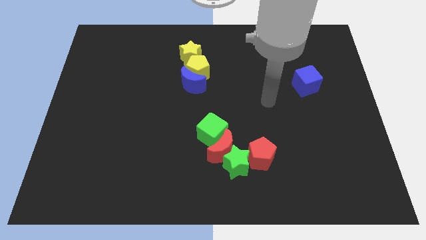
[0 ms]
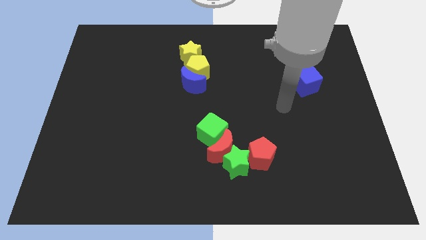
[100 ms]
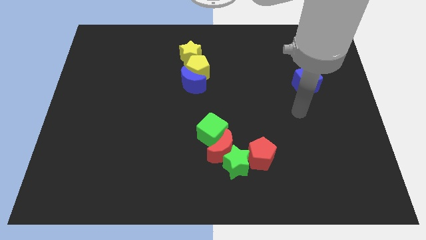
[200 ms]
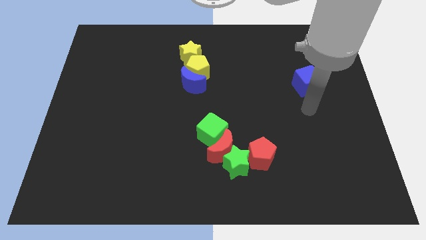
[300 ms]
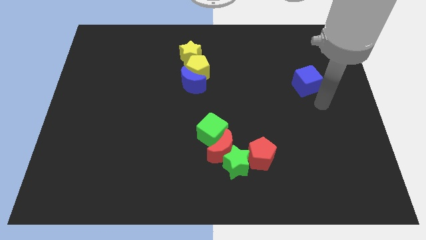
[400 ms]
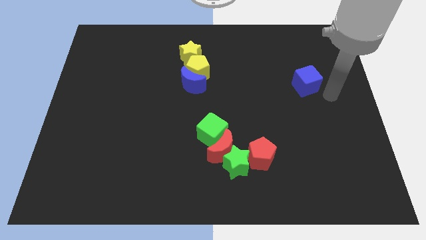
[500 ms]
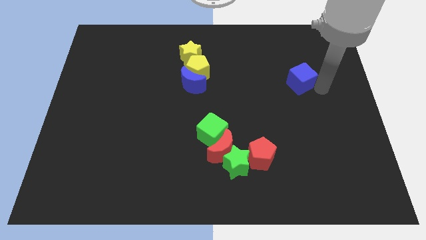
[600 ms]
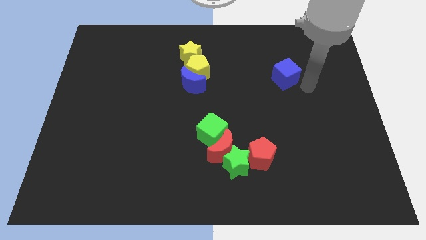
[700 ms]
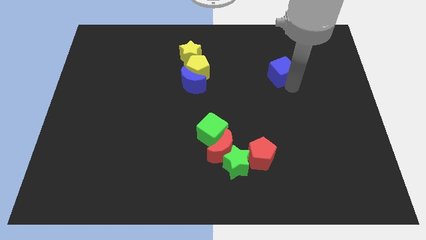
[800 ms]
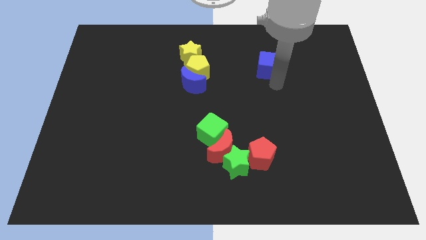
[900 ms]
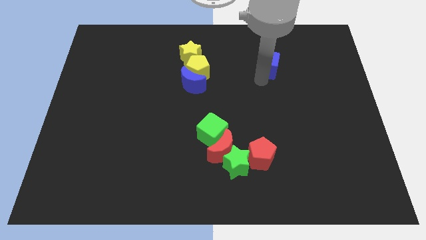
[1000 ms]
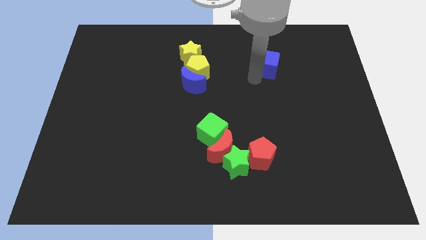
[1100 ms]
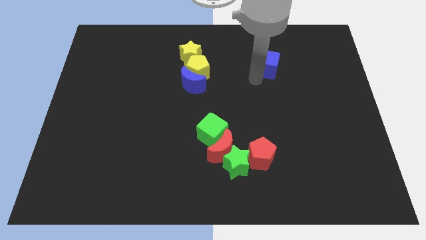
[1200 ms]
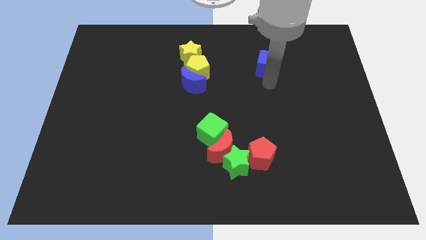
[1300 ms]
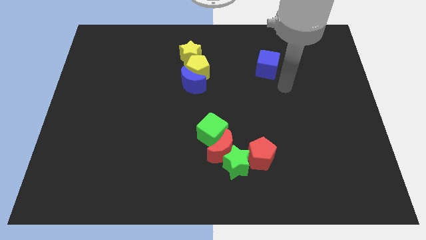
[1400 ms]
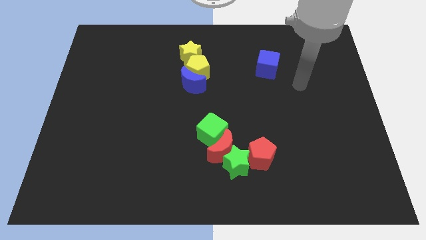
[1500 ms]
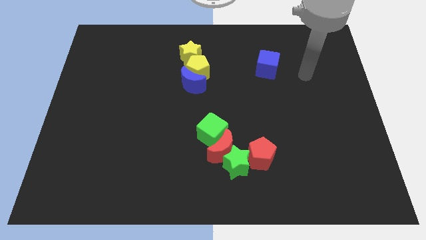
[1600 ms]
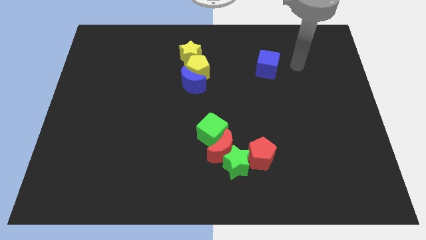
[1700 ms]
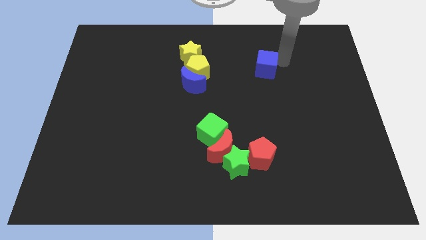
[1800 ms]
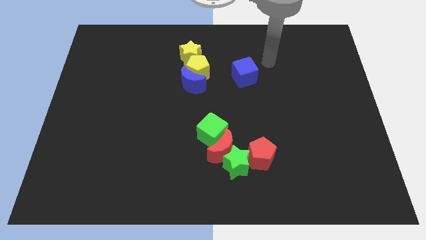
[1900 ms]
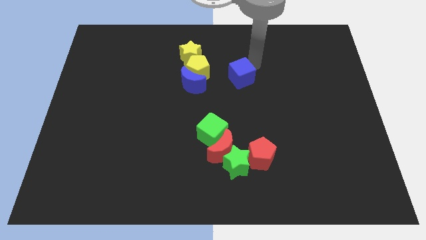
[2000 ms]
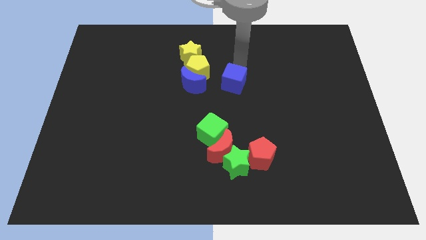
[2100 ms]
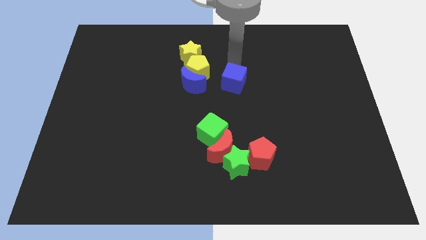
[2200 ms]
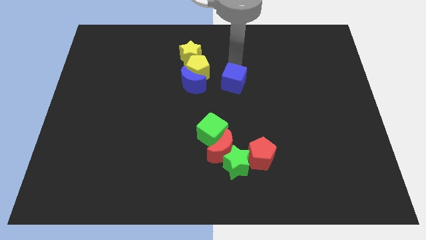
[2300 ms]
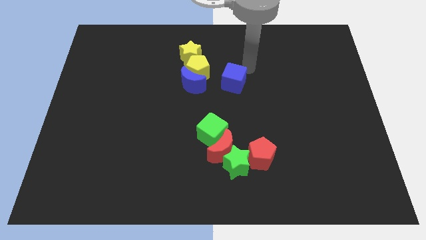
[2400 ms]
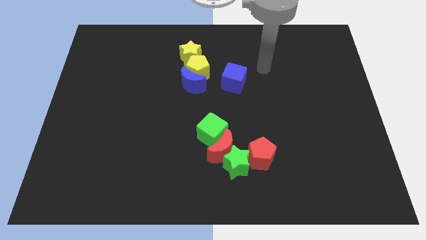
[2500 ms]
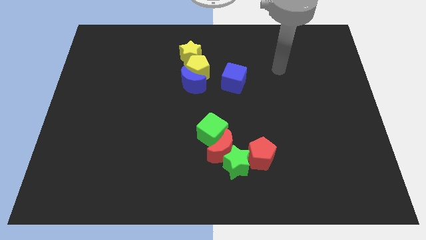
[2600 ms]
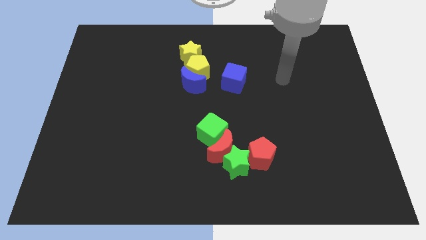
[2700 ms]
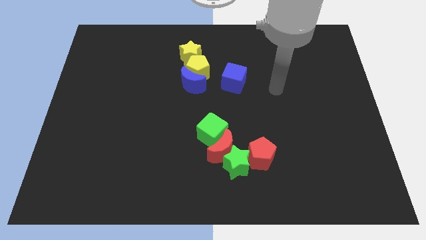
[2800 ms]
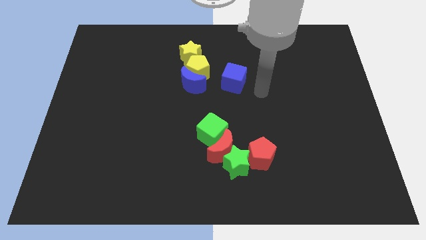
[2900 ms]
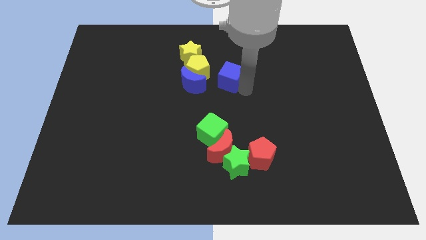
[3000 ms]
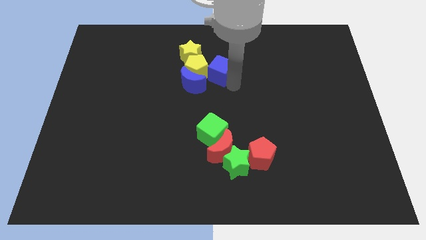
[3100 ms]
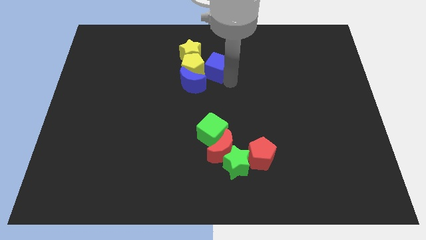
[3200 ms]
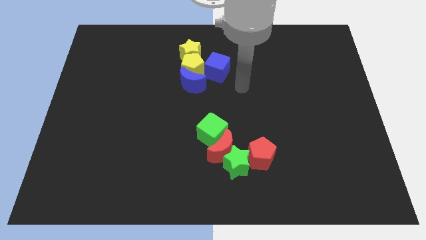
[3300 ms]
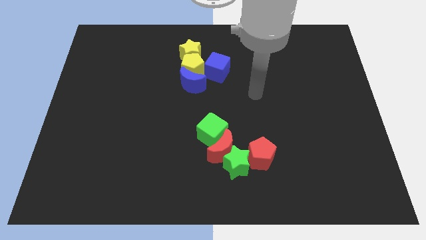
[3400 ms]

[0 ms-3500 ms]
slide the blue cube into the right side of the yellow pentagon

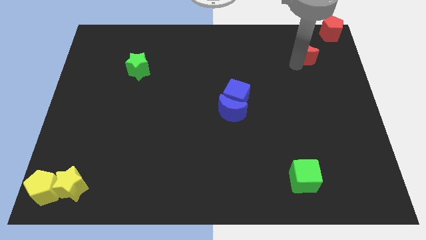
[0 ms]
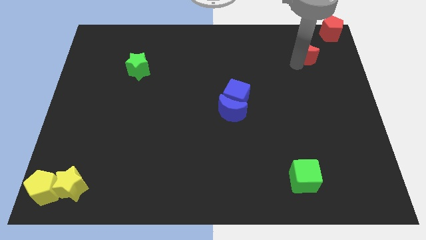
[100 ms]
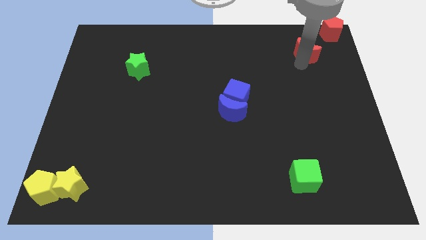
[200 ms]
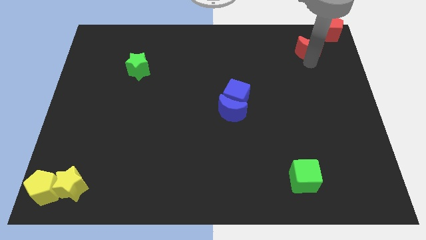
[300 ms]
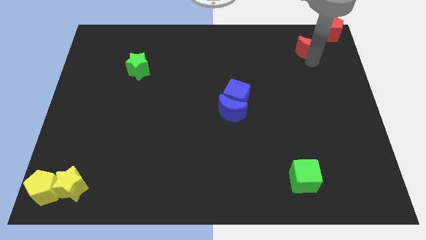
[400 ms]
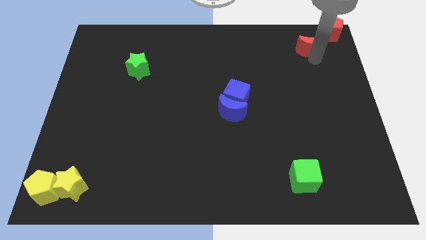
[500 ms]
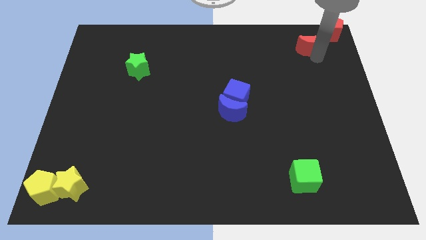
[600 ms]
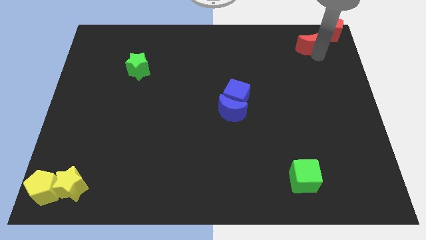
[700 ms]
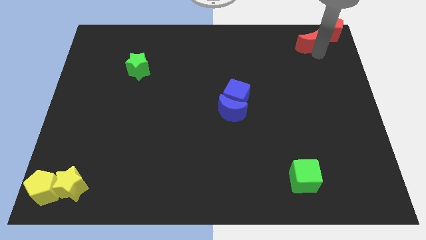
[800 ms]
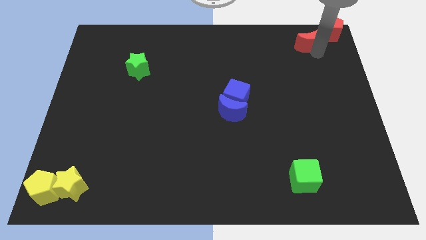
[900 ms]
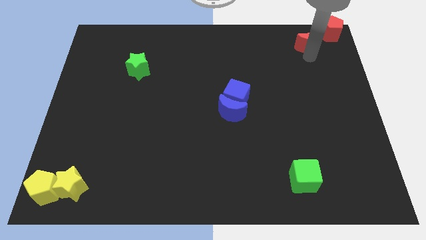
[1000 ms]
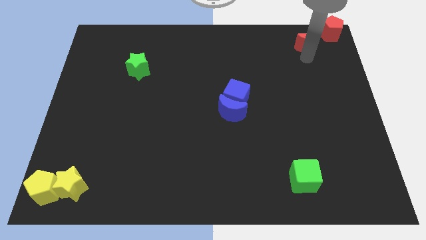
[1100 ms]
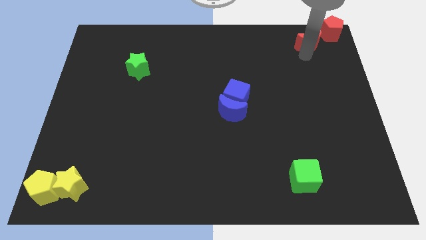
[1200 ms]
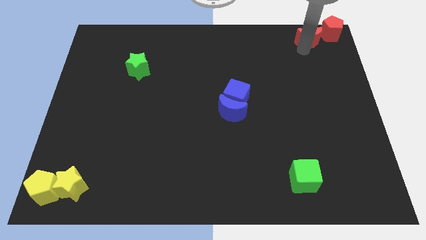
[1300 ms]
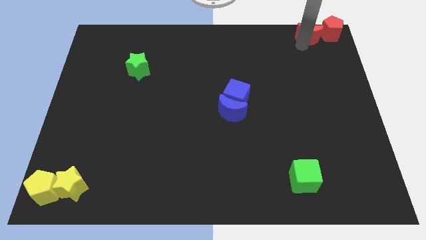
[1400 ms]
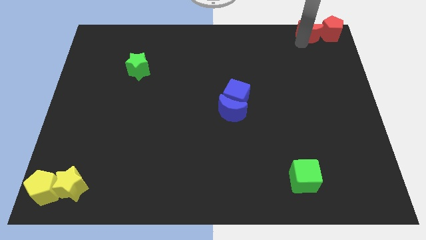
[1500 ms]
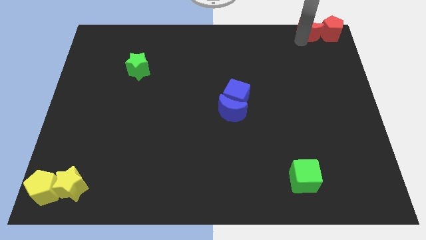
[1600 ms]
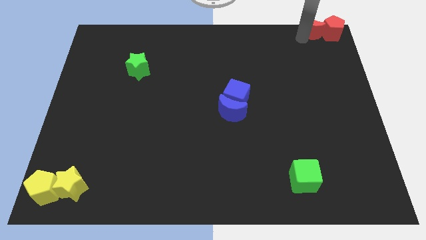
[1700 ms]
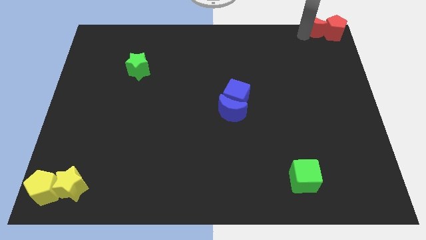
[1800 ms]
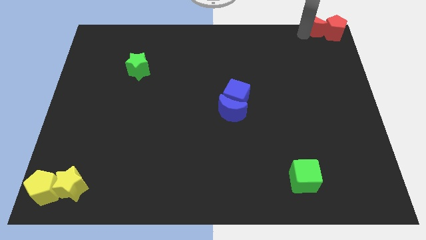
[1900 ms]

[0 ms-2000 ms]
move the red moon to the top right of the board

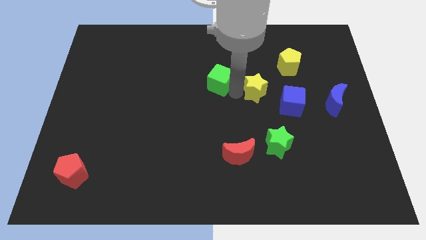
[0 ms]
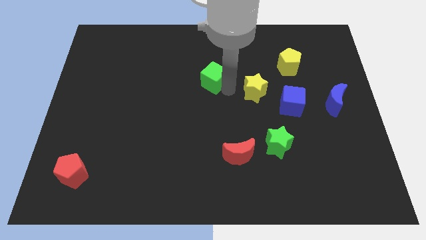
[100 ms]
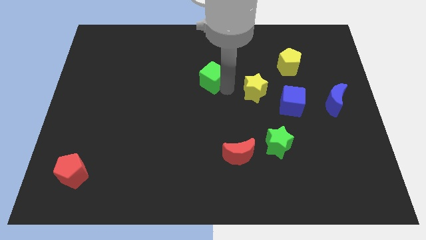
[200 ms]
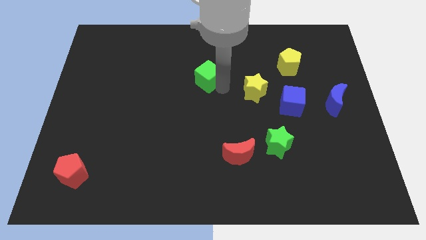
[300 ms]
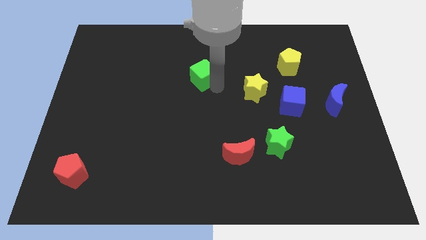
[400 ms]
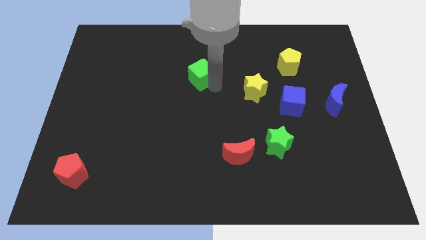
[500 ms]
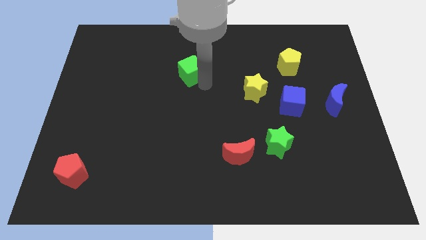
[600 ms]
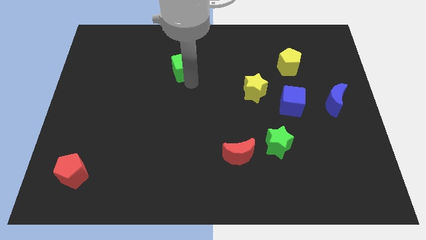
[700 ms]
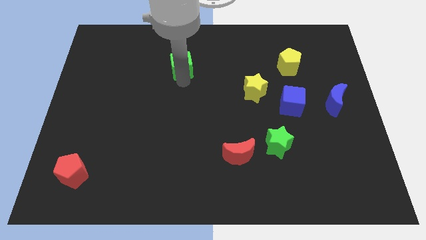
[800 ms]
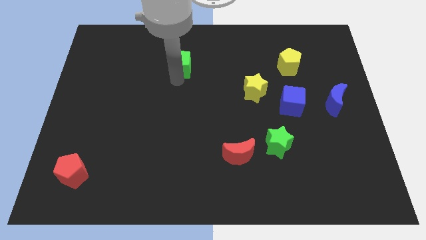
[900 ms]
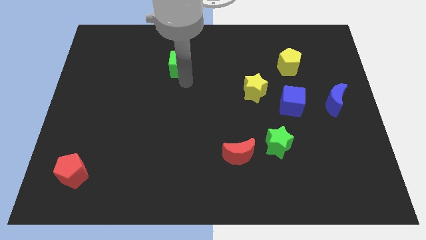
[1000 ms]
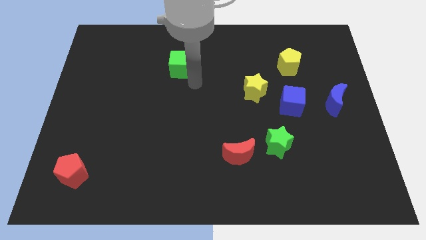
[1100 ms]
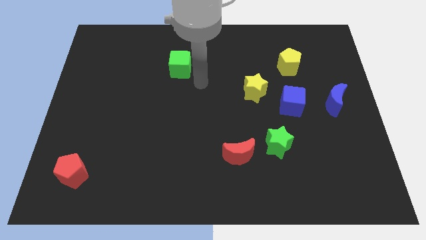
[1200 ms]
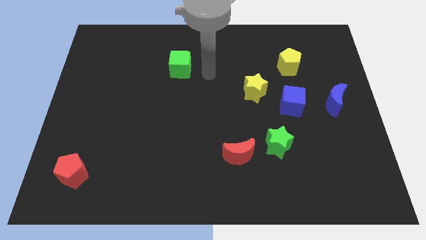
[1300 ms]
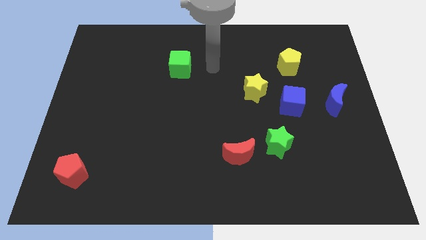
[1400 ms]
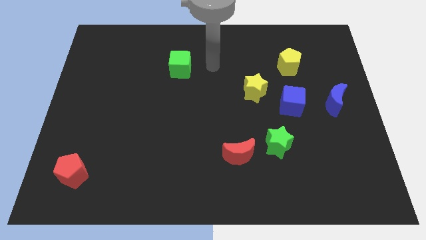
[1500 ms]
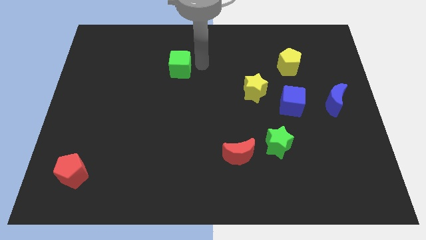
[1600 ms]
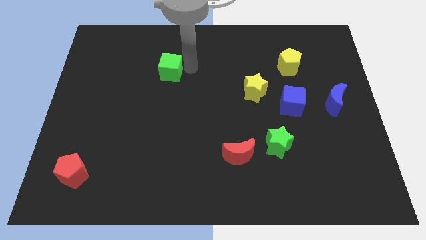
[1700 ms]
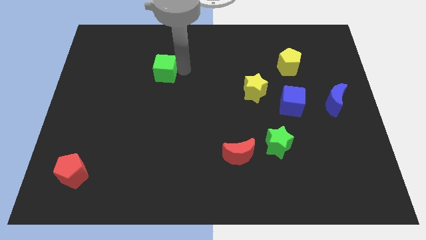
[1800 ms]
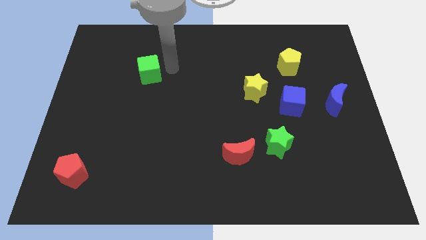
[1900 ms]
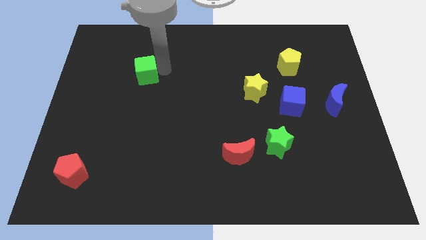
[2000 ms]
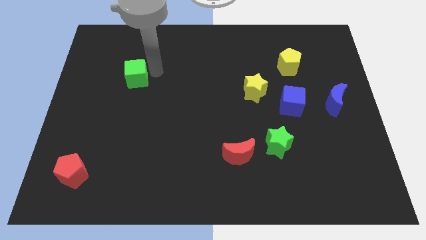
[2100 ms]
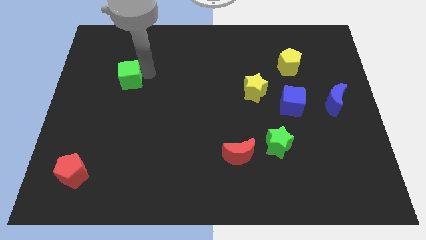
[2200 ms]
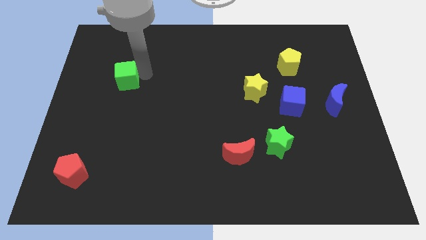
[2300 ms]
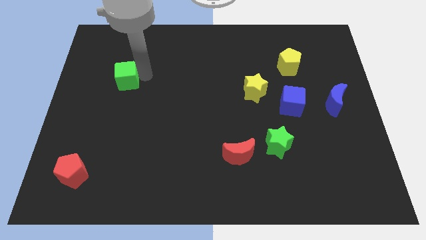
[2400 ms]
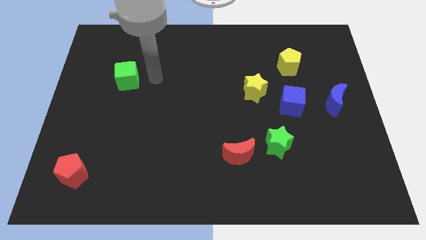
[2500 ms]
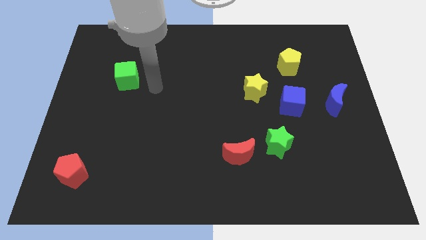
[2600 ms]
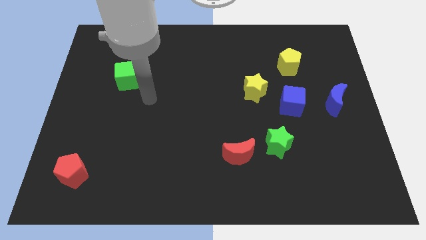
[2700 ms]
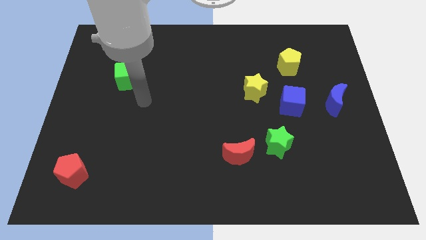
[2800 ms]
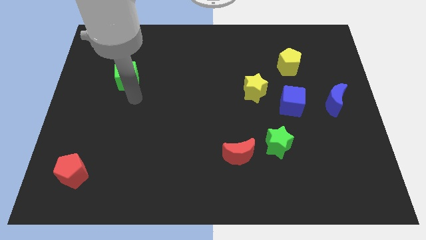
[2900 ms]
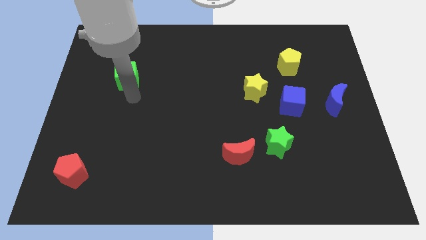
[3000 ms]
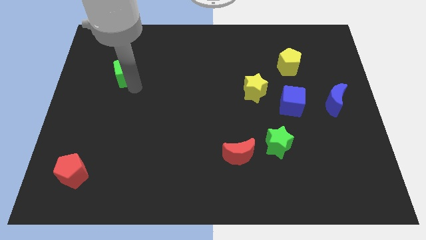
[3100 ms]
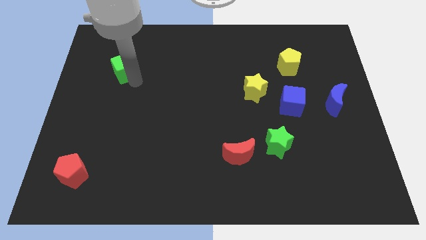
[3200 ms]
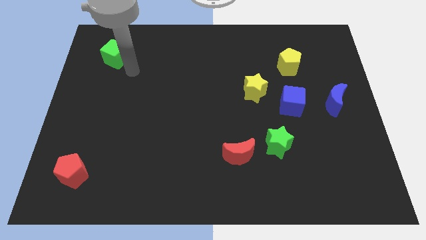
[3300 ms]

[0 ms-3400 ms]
push the green cube to the top of the red pentagon
